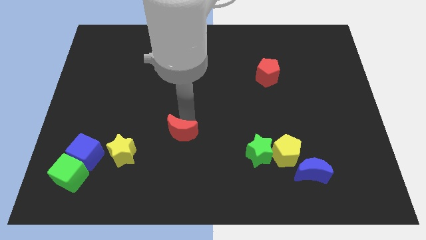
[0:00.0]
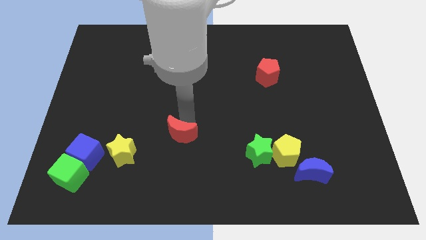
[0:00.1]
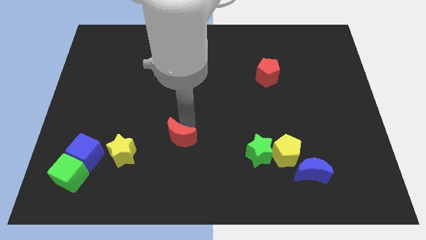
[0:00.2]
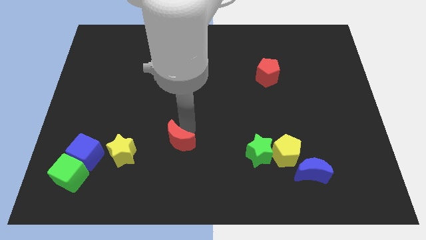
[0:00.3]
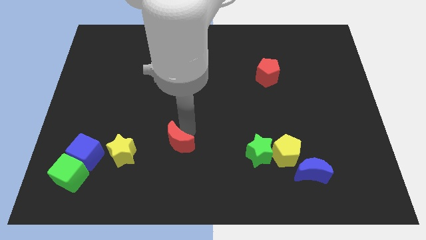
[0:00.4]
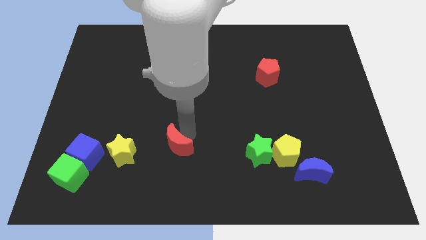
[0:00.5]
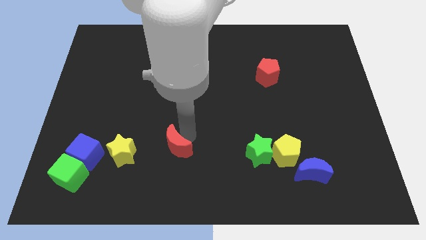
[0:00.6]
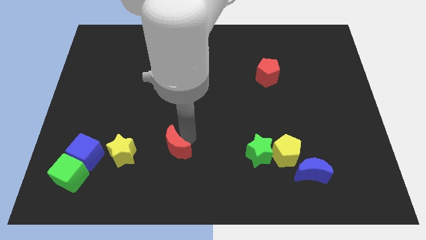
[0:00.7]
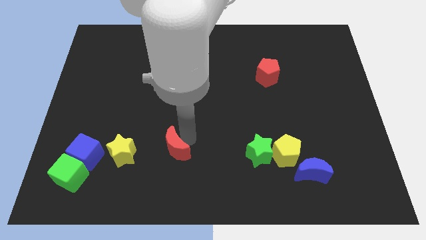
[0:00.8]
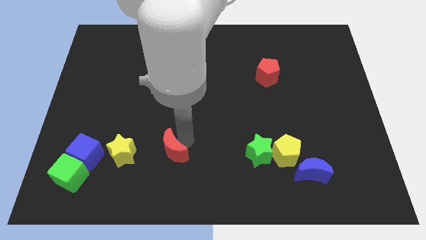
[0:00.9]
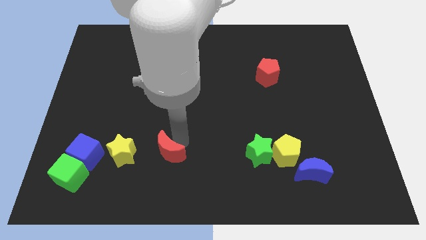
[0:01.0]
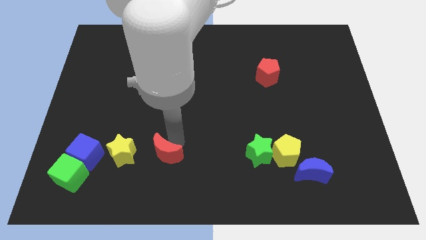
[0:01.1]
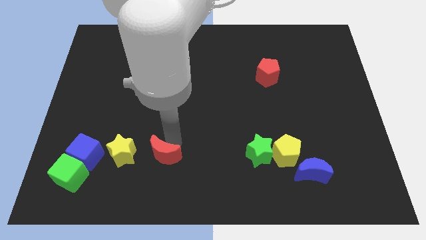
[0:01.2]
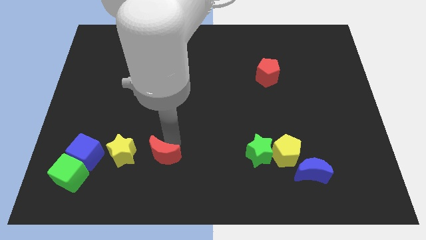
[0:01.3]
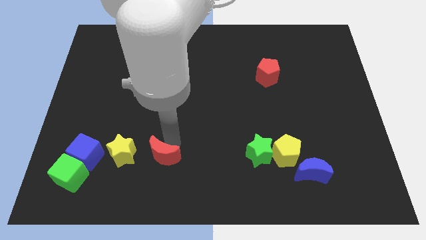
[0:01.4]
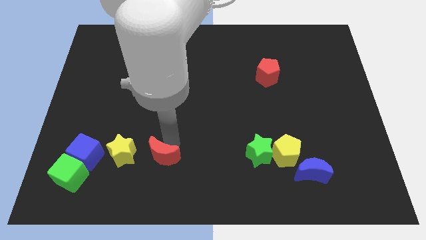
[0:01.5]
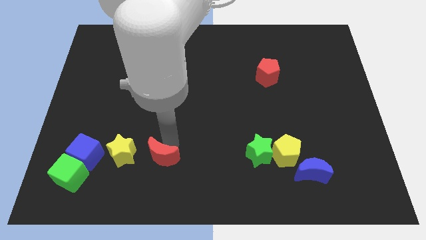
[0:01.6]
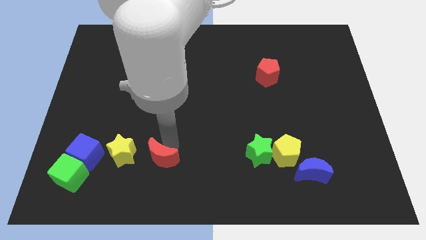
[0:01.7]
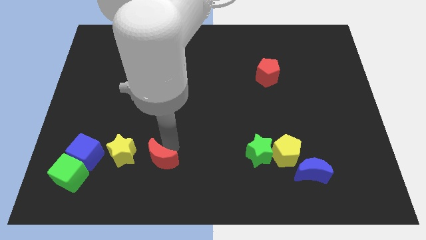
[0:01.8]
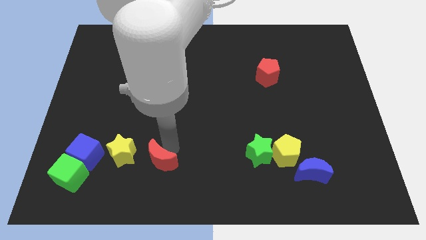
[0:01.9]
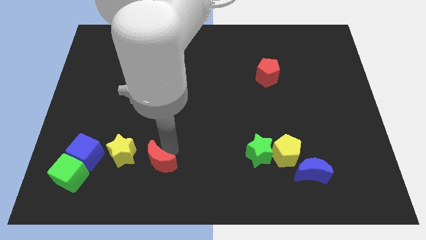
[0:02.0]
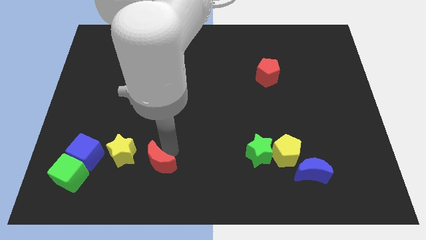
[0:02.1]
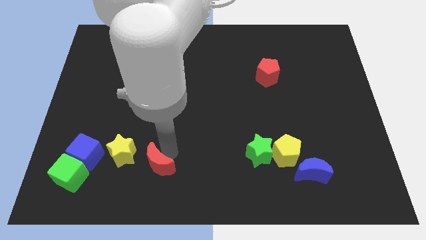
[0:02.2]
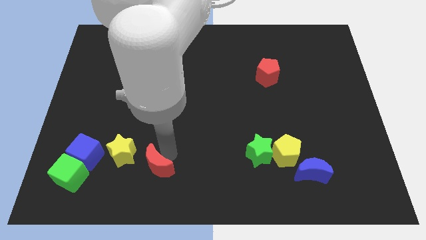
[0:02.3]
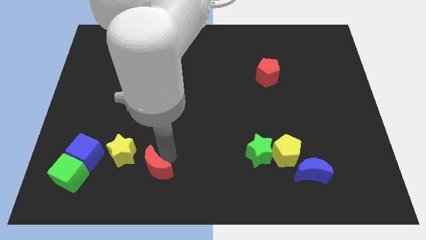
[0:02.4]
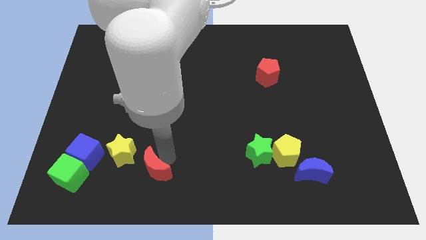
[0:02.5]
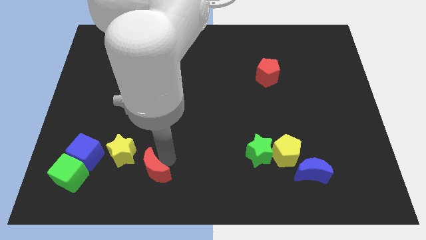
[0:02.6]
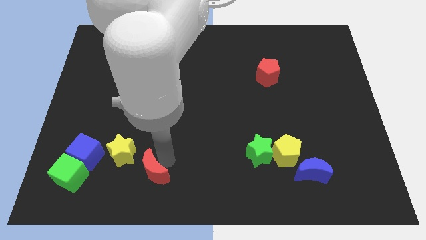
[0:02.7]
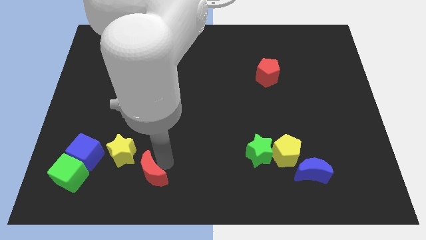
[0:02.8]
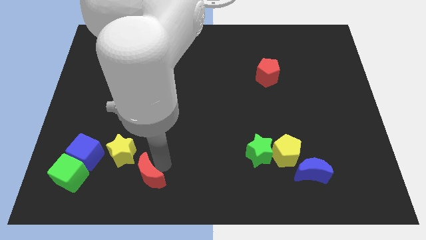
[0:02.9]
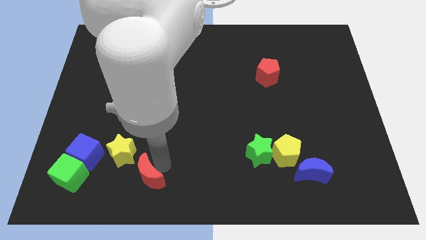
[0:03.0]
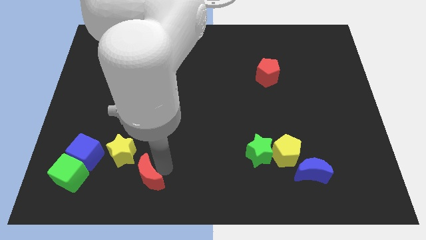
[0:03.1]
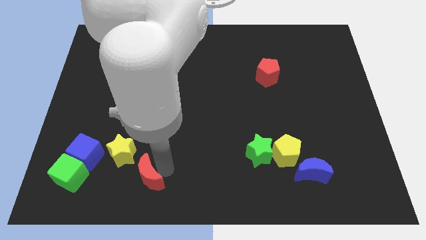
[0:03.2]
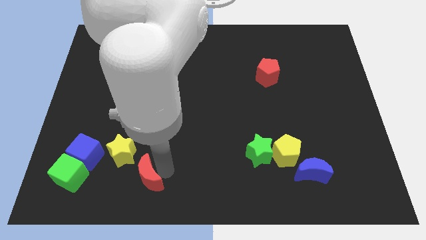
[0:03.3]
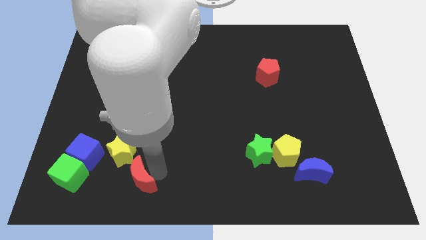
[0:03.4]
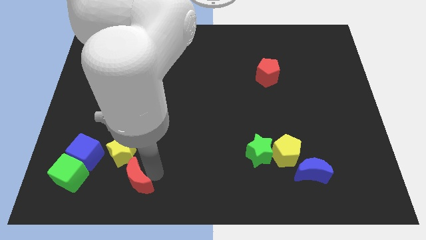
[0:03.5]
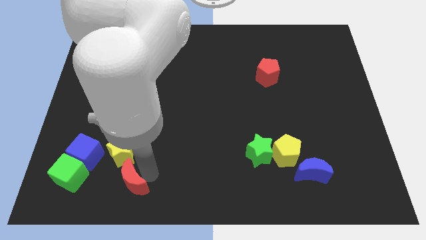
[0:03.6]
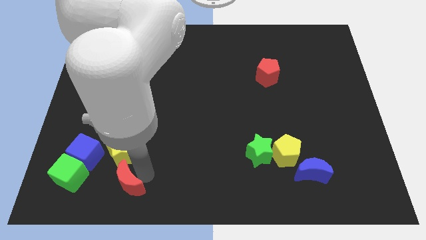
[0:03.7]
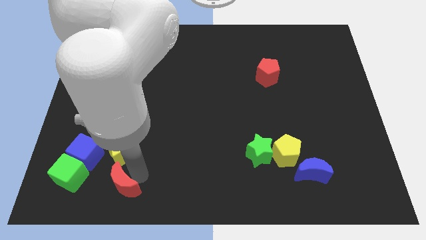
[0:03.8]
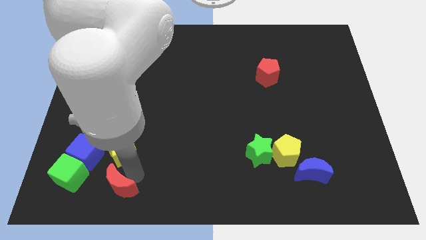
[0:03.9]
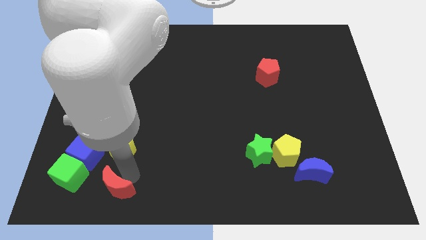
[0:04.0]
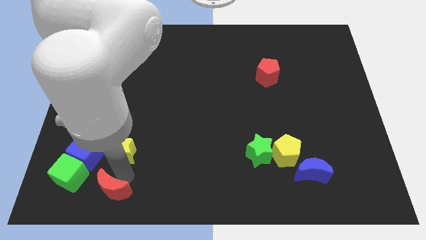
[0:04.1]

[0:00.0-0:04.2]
move the red crescent to the bottom of the yellow star

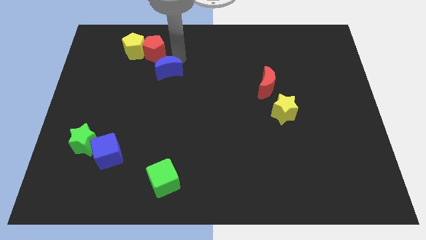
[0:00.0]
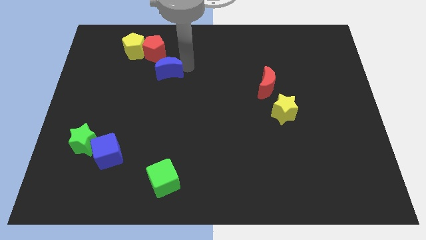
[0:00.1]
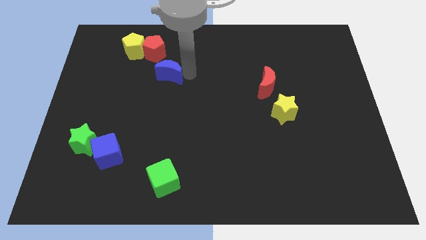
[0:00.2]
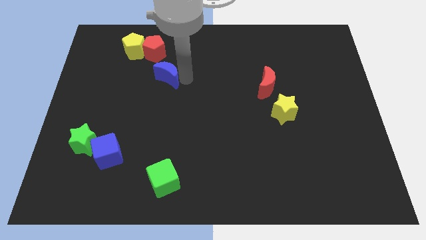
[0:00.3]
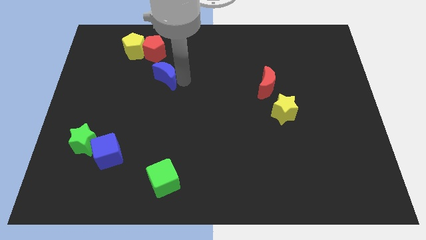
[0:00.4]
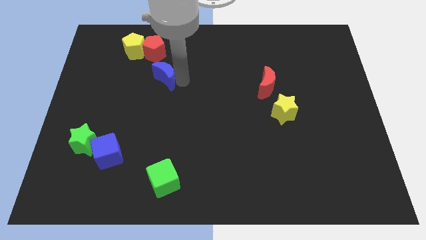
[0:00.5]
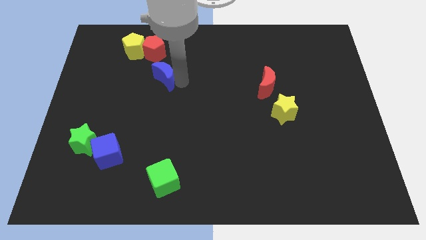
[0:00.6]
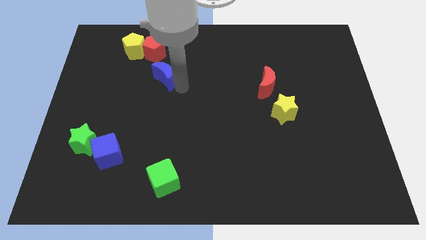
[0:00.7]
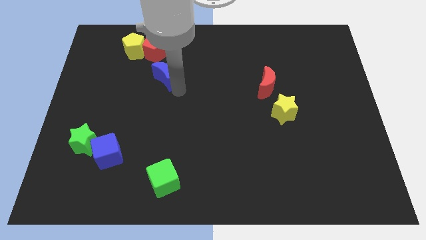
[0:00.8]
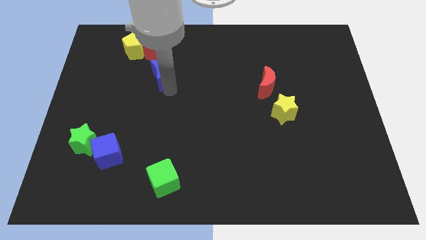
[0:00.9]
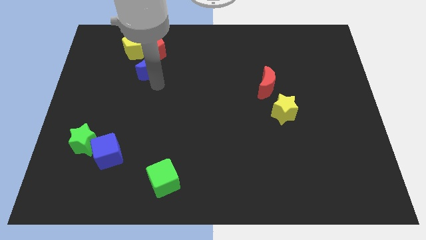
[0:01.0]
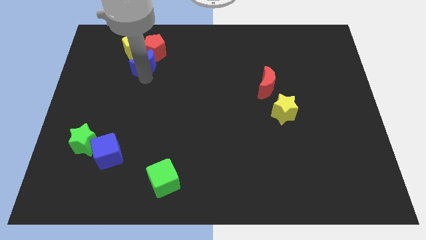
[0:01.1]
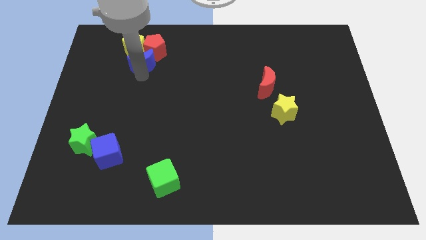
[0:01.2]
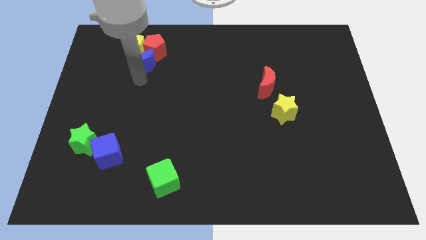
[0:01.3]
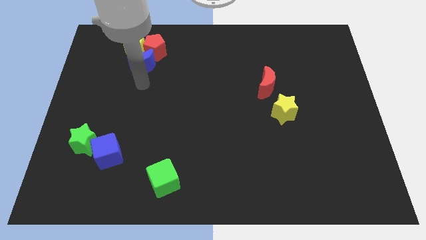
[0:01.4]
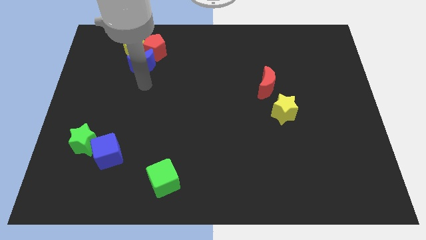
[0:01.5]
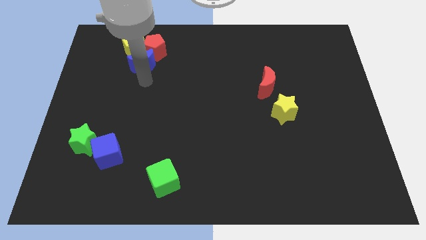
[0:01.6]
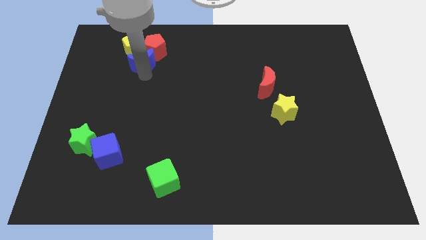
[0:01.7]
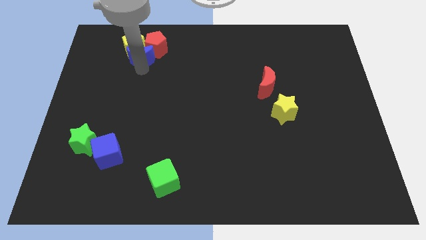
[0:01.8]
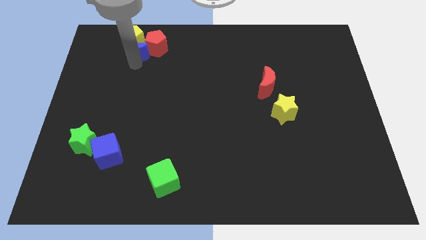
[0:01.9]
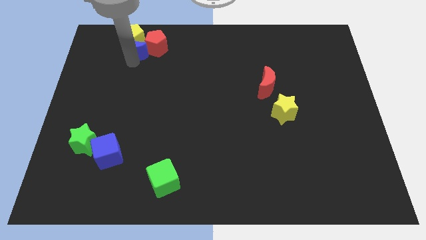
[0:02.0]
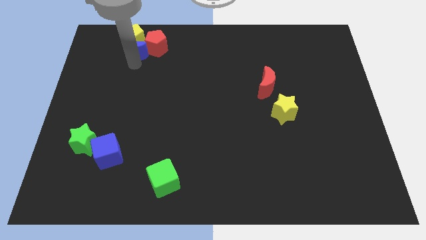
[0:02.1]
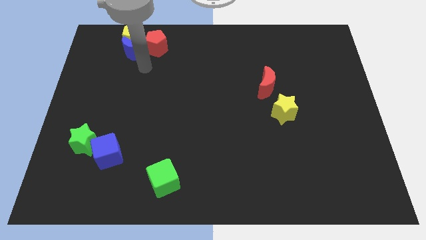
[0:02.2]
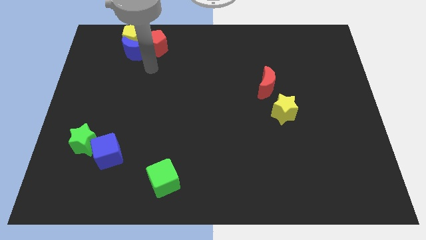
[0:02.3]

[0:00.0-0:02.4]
push the blue crescent into the yellow pentagon

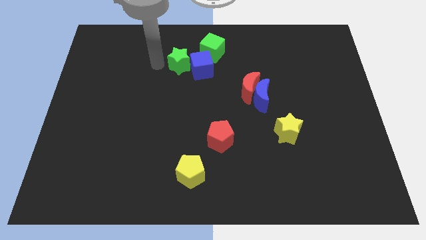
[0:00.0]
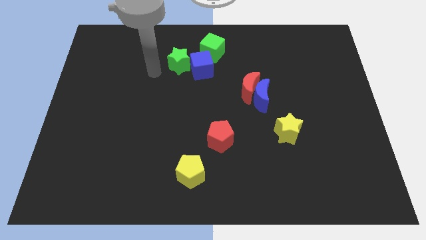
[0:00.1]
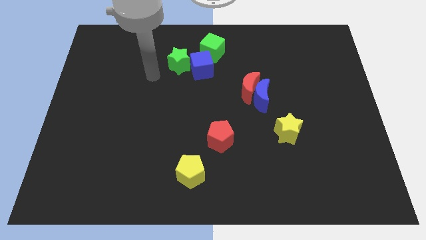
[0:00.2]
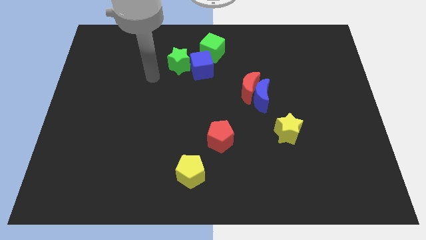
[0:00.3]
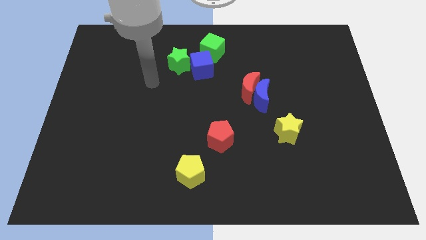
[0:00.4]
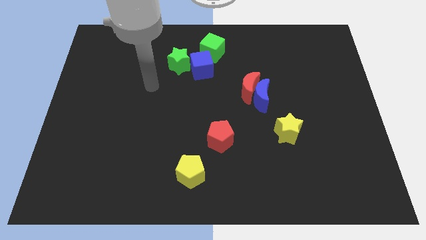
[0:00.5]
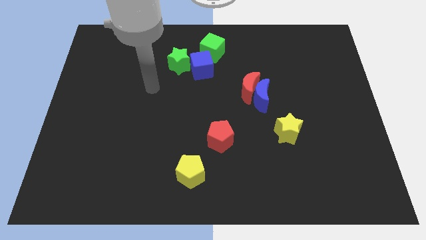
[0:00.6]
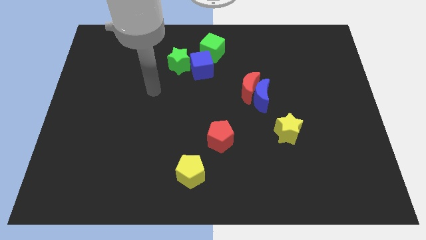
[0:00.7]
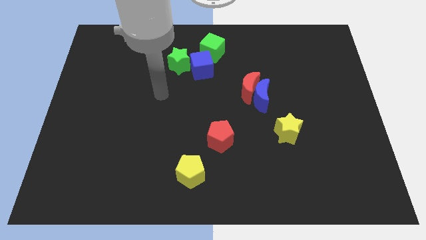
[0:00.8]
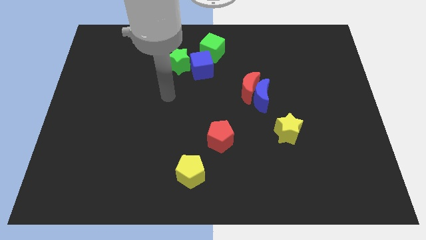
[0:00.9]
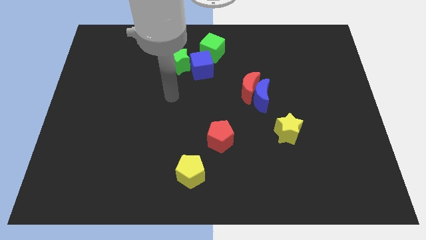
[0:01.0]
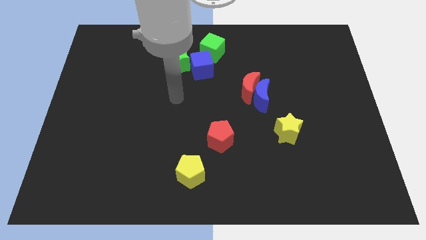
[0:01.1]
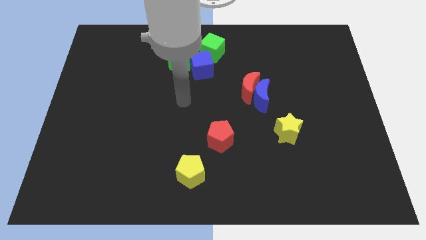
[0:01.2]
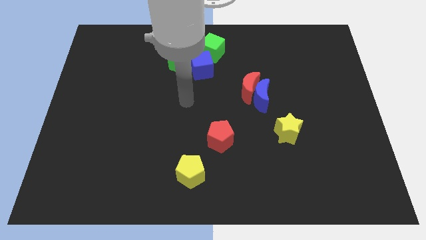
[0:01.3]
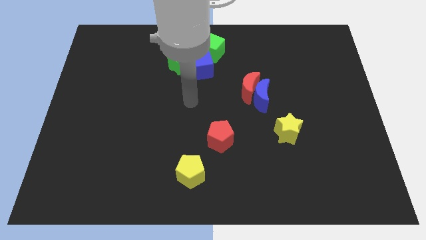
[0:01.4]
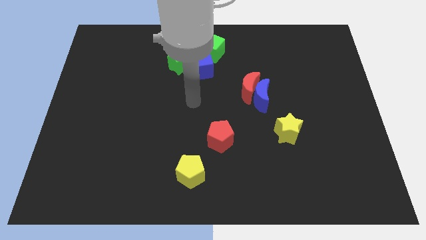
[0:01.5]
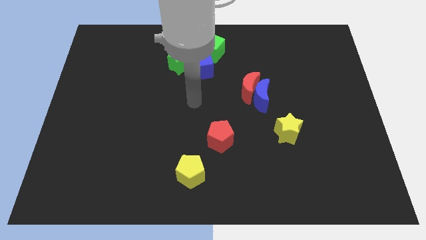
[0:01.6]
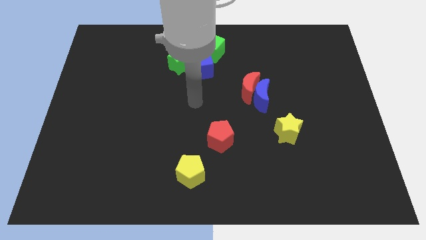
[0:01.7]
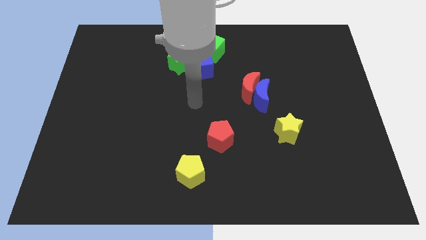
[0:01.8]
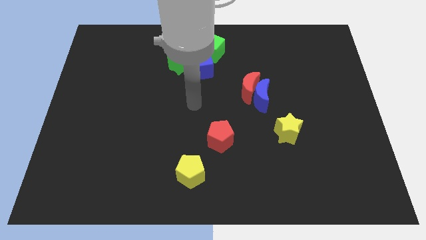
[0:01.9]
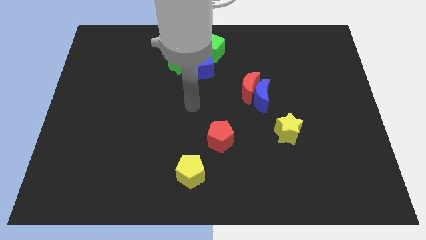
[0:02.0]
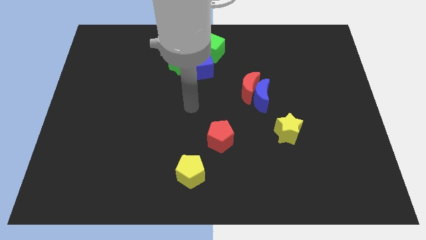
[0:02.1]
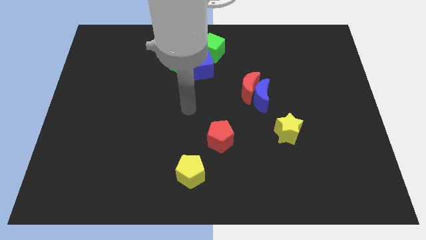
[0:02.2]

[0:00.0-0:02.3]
move your arm to the center of the board
